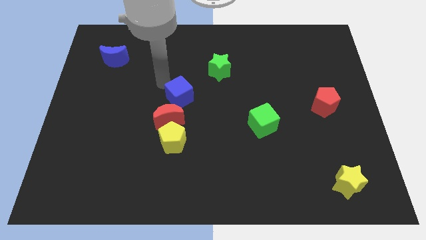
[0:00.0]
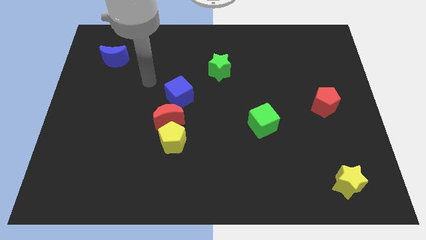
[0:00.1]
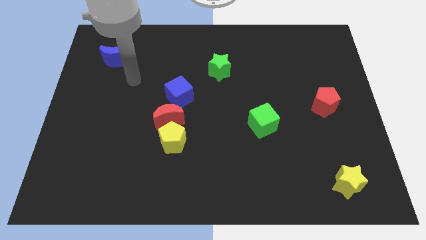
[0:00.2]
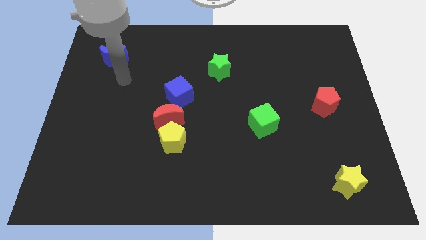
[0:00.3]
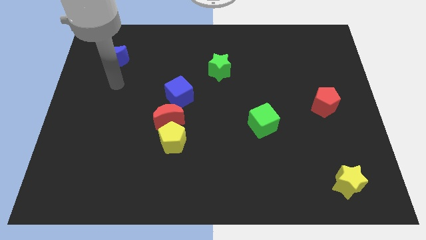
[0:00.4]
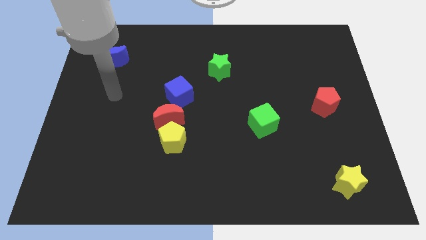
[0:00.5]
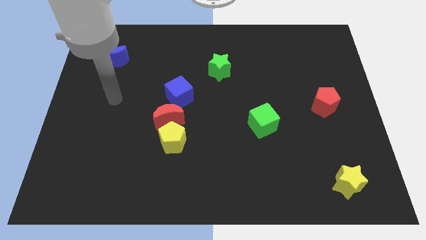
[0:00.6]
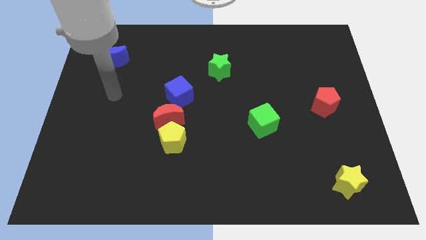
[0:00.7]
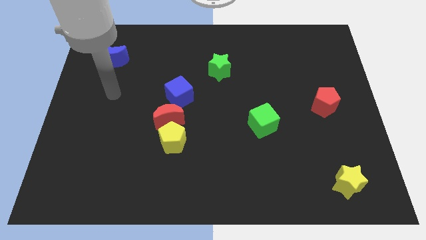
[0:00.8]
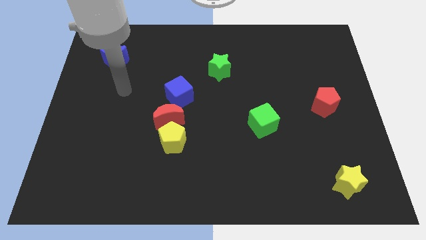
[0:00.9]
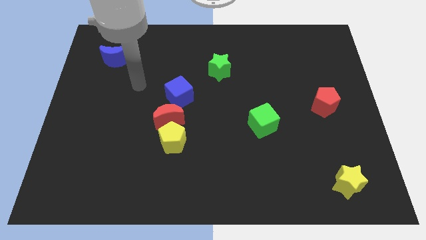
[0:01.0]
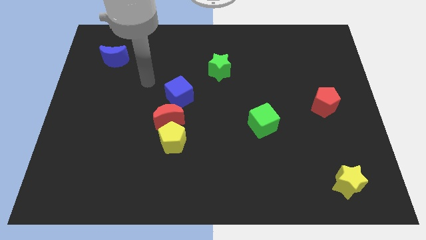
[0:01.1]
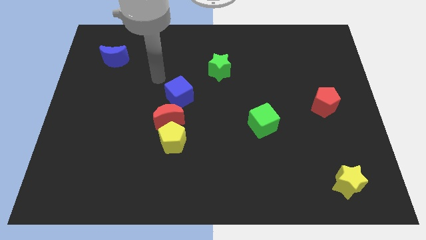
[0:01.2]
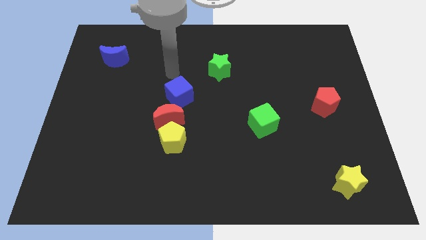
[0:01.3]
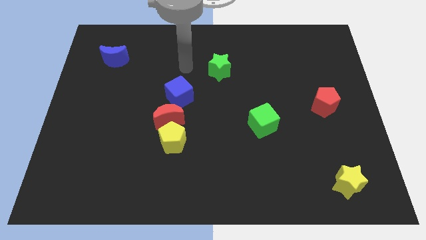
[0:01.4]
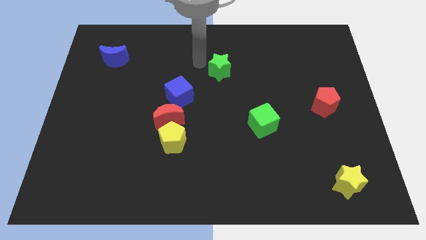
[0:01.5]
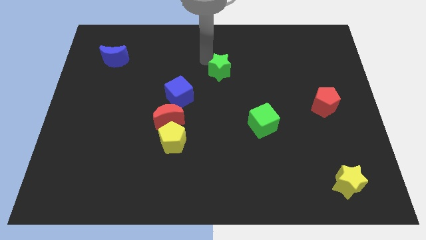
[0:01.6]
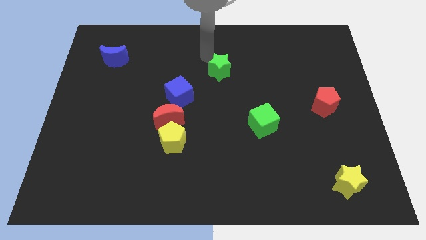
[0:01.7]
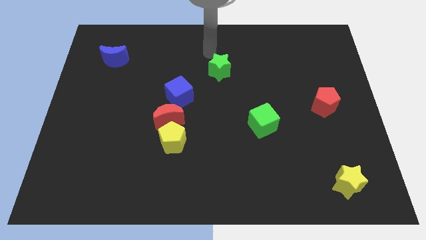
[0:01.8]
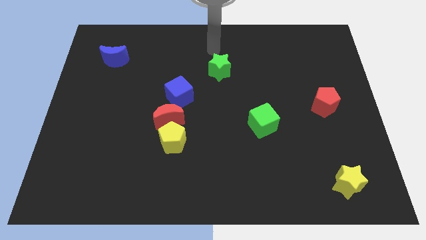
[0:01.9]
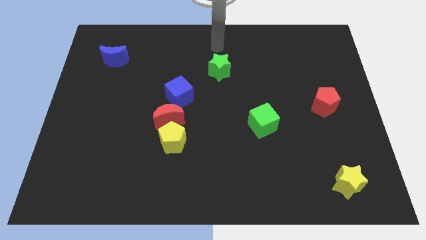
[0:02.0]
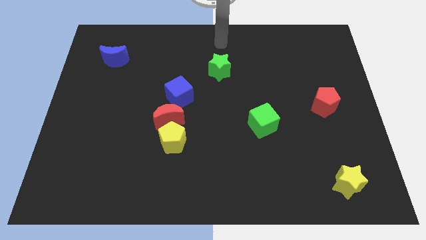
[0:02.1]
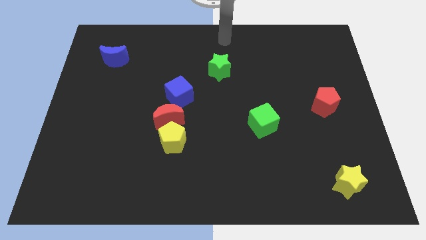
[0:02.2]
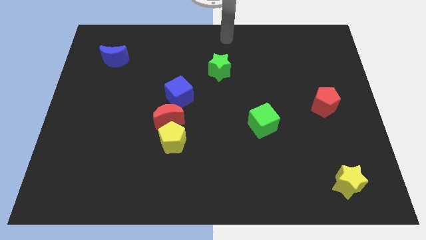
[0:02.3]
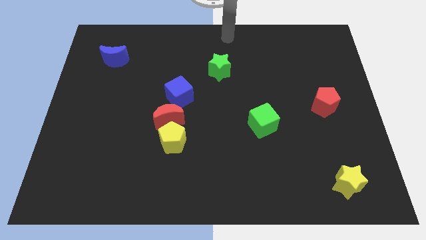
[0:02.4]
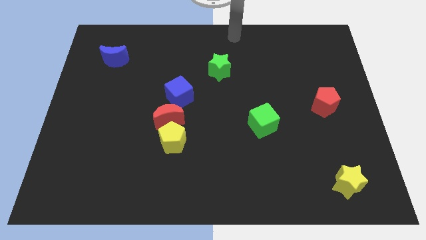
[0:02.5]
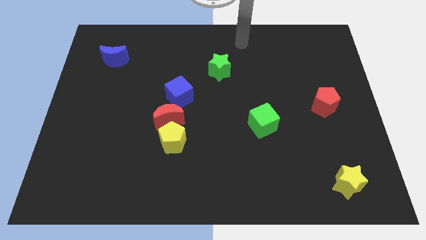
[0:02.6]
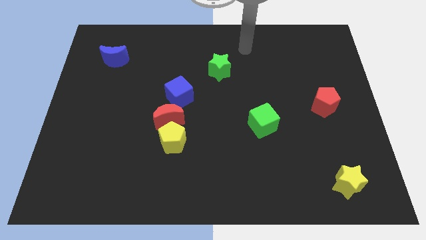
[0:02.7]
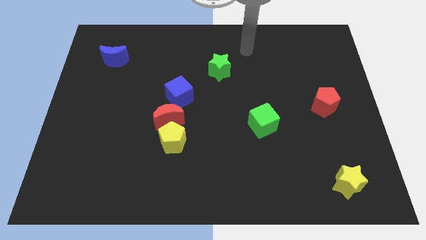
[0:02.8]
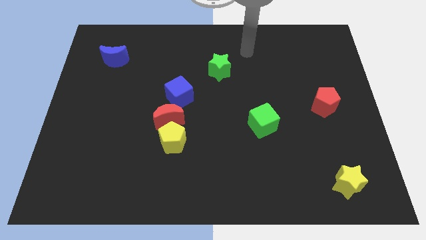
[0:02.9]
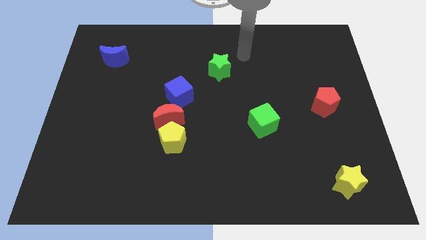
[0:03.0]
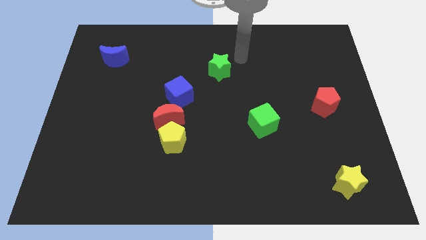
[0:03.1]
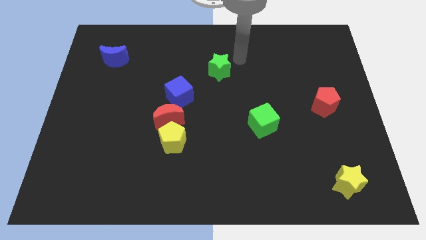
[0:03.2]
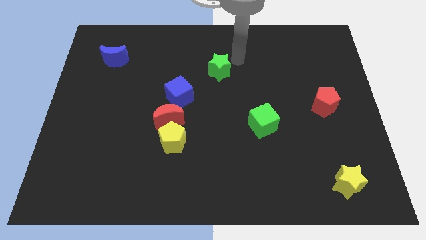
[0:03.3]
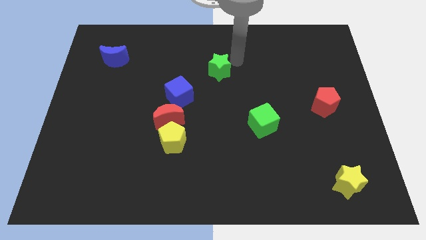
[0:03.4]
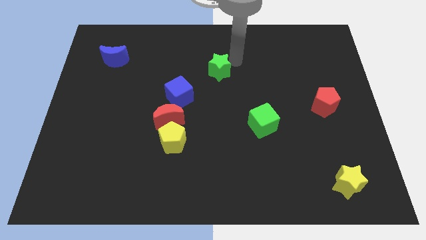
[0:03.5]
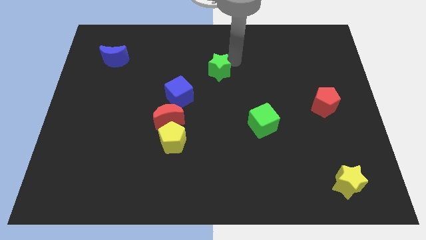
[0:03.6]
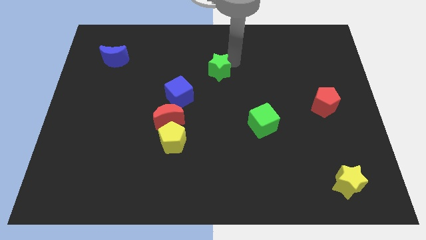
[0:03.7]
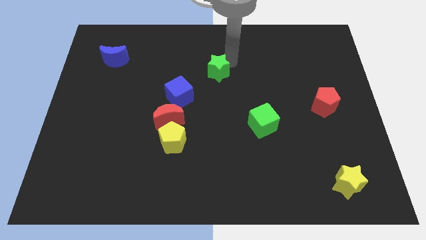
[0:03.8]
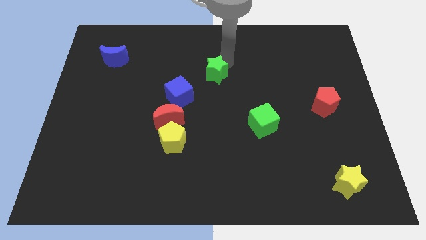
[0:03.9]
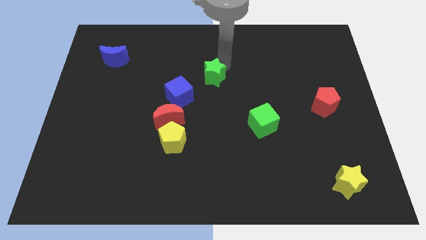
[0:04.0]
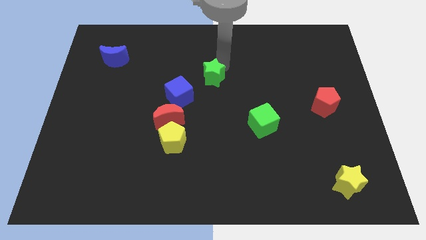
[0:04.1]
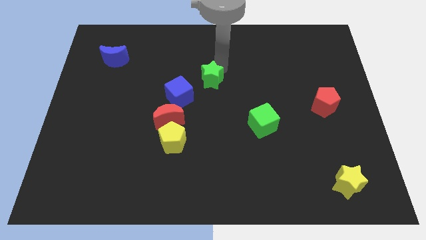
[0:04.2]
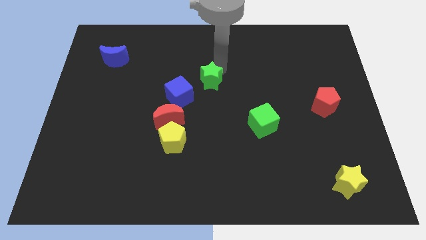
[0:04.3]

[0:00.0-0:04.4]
drag the green star towards the top right side of the blue cube

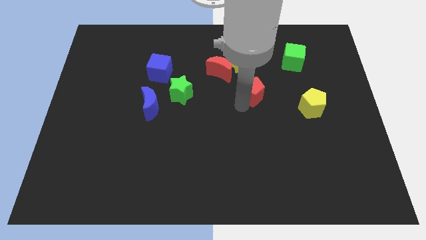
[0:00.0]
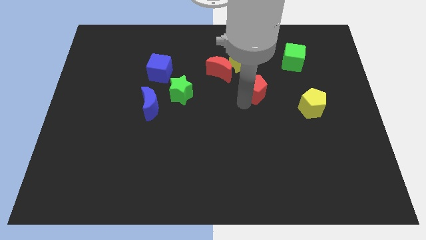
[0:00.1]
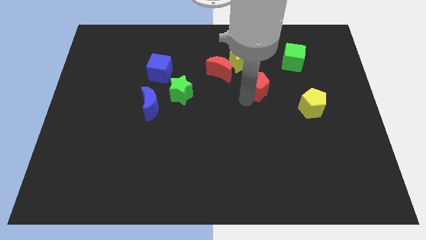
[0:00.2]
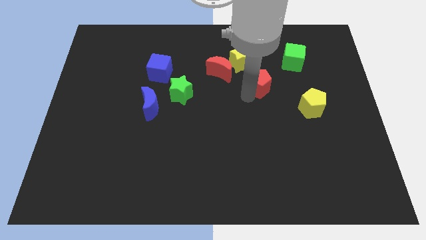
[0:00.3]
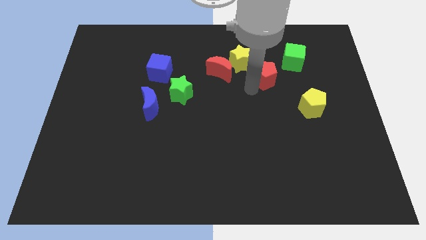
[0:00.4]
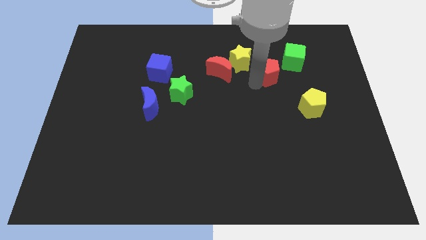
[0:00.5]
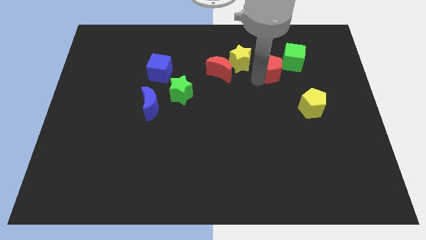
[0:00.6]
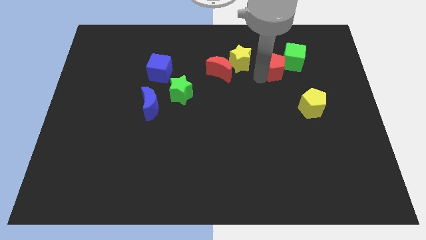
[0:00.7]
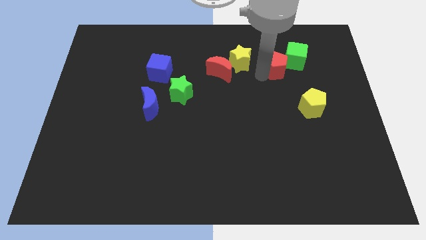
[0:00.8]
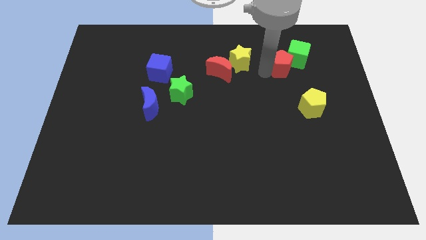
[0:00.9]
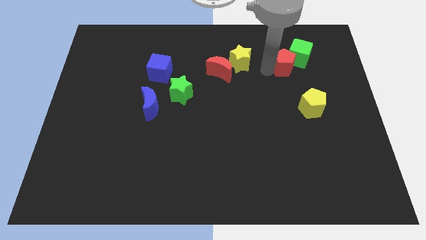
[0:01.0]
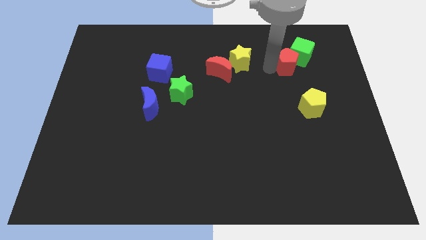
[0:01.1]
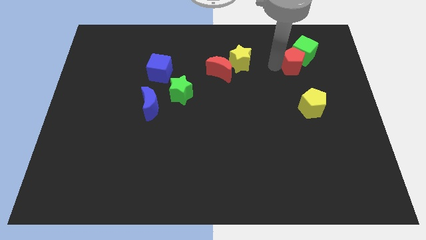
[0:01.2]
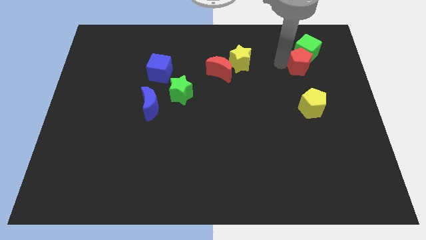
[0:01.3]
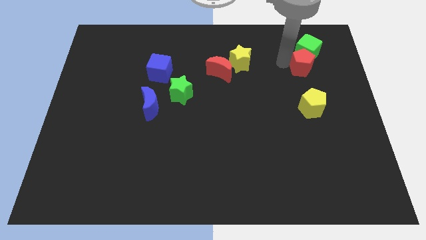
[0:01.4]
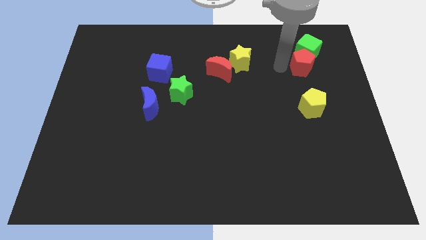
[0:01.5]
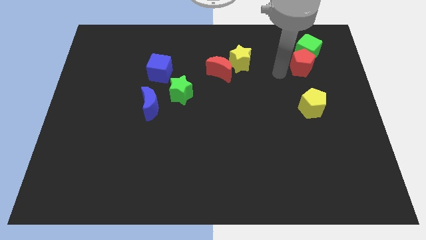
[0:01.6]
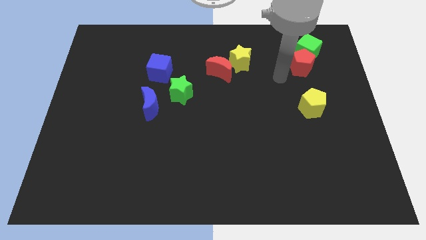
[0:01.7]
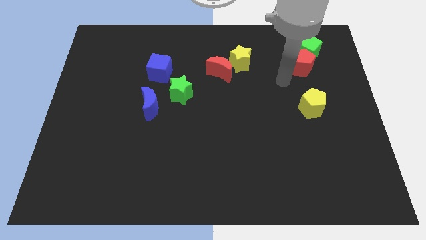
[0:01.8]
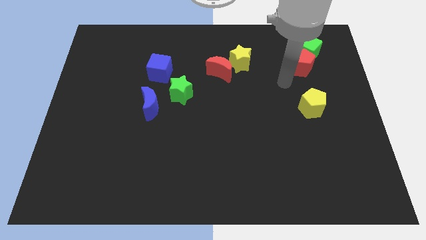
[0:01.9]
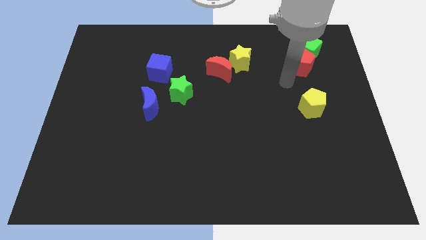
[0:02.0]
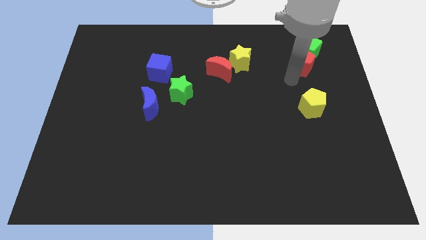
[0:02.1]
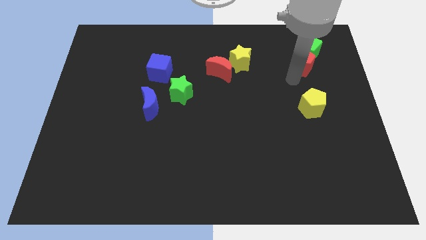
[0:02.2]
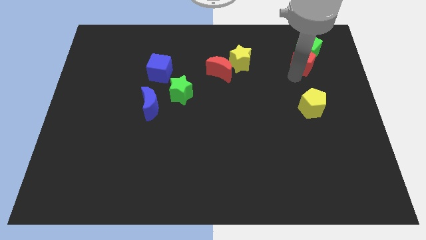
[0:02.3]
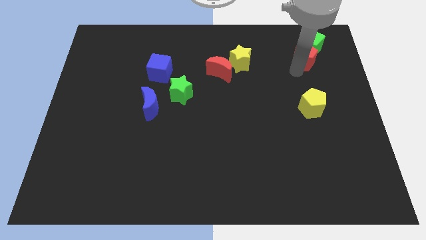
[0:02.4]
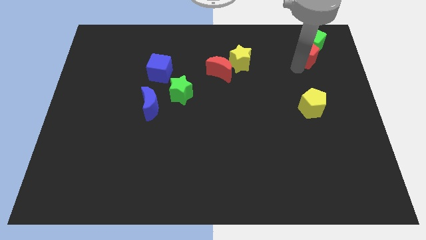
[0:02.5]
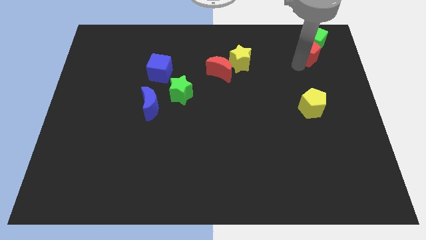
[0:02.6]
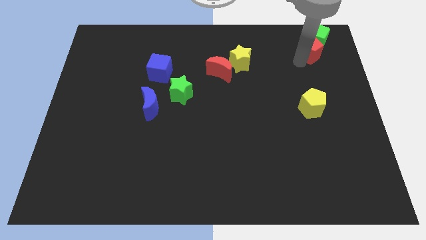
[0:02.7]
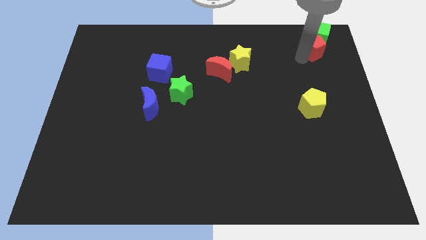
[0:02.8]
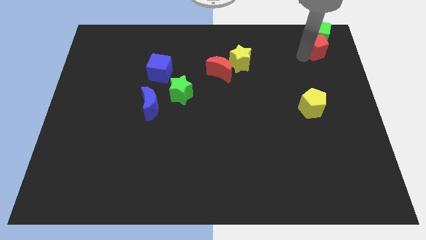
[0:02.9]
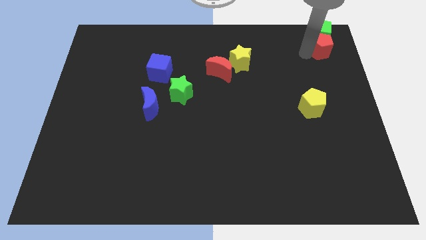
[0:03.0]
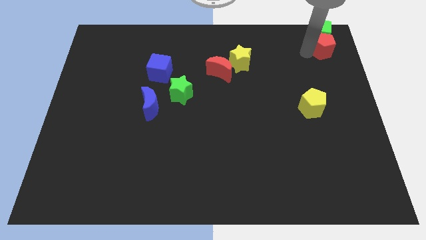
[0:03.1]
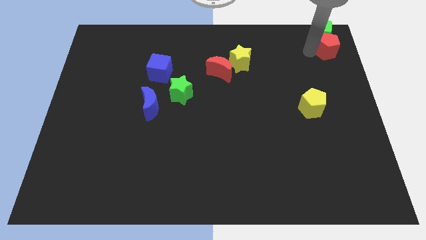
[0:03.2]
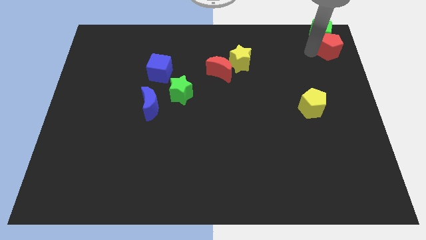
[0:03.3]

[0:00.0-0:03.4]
push red pentagon towards top right

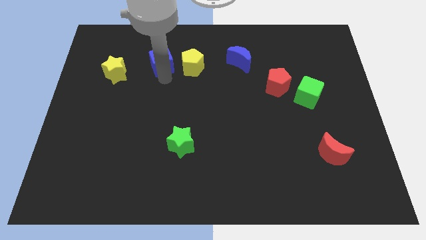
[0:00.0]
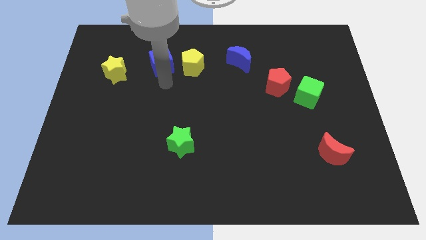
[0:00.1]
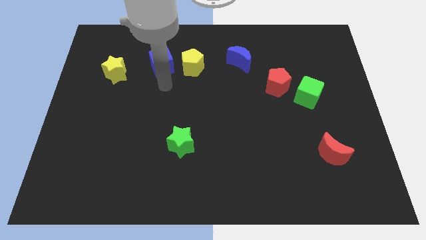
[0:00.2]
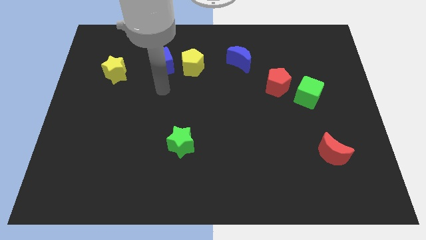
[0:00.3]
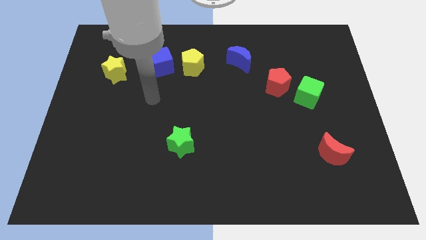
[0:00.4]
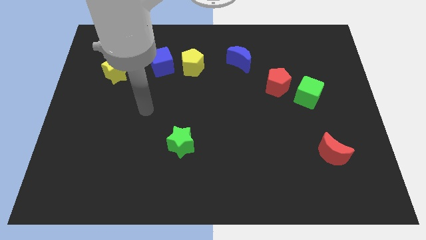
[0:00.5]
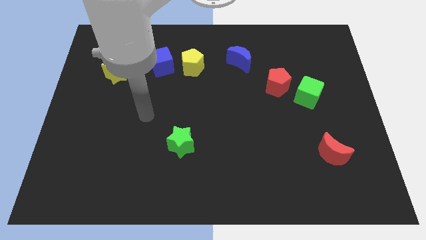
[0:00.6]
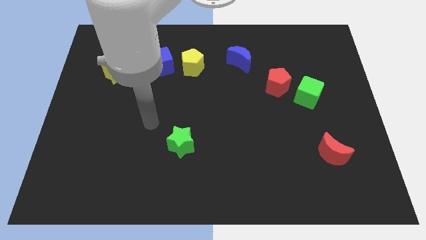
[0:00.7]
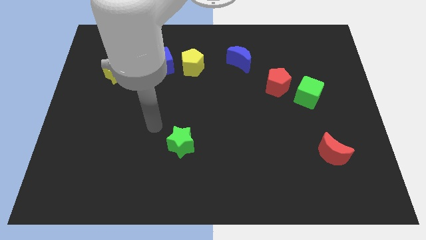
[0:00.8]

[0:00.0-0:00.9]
move away from the blue cube

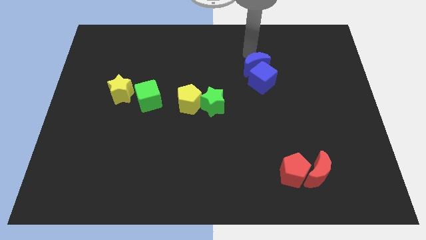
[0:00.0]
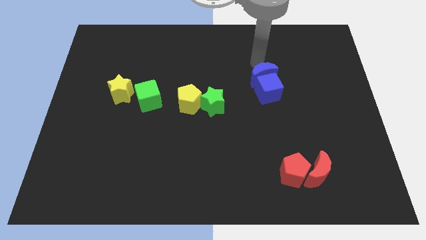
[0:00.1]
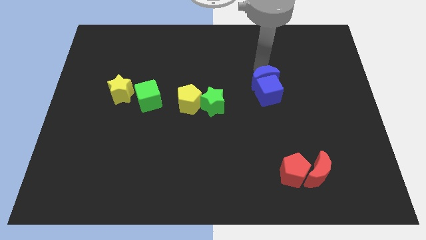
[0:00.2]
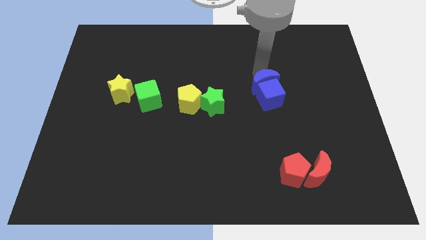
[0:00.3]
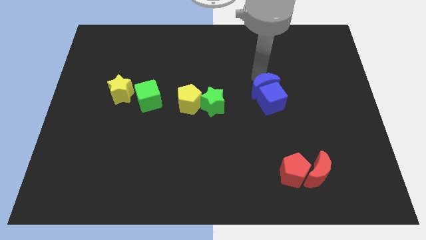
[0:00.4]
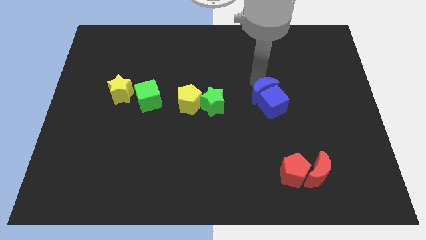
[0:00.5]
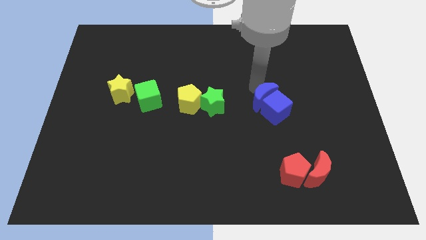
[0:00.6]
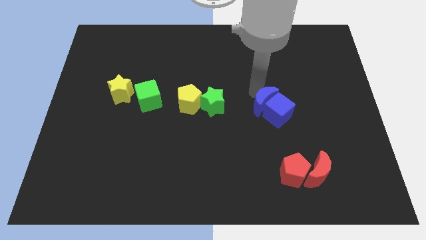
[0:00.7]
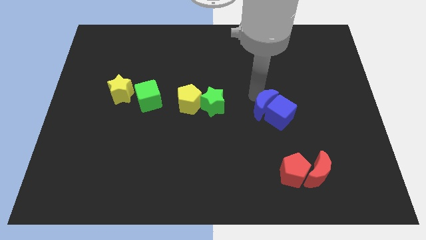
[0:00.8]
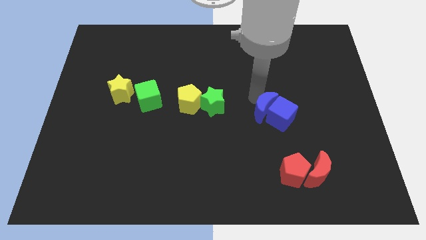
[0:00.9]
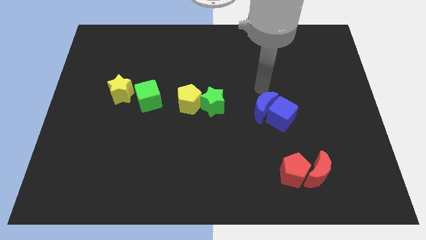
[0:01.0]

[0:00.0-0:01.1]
push the blue half moon and blue cube down wards
